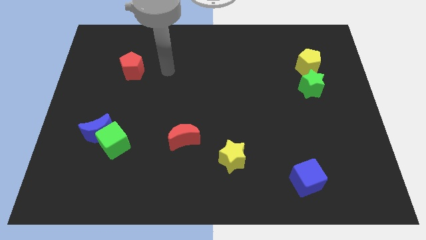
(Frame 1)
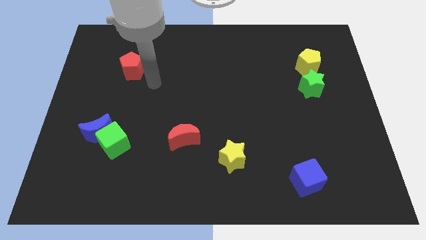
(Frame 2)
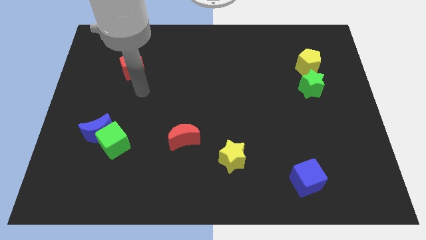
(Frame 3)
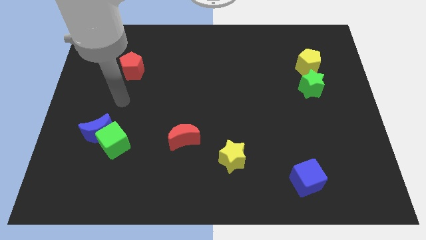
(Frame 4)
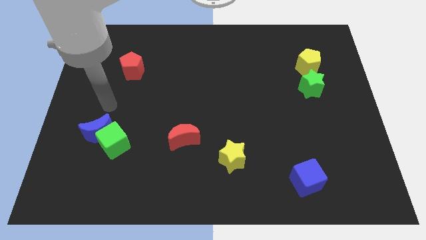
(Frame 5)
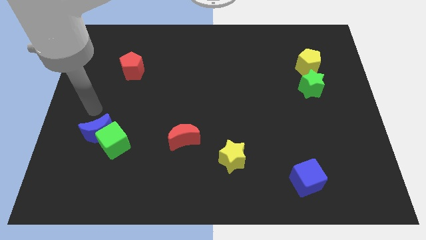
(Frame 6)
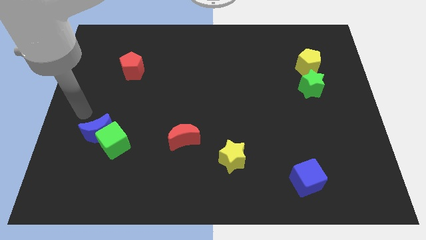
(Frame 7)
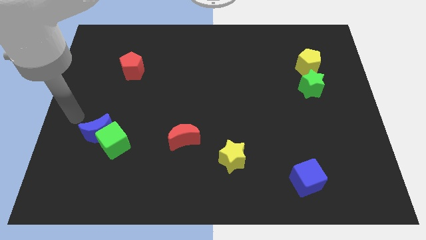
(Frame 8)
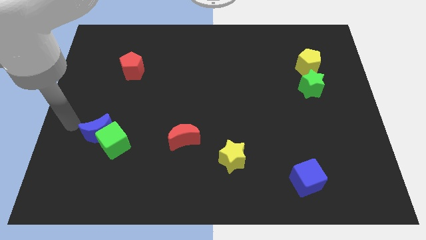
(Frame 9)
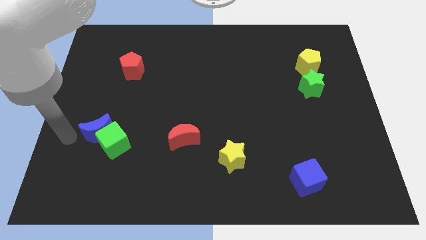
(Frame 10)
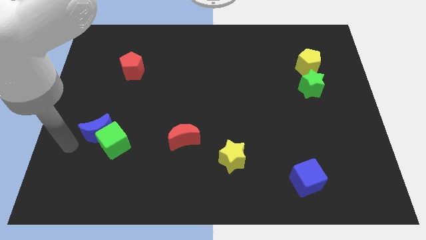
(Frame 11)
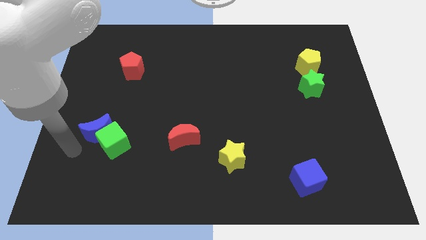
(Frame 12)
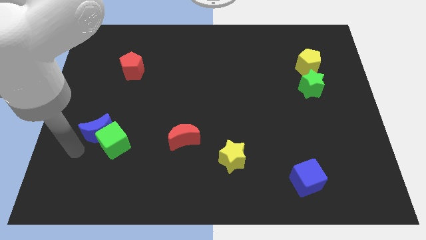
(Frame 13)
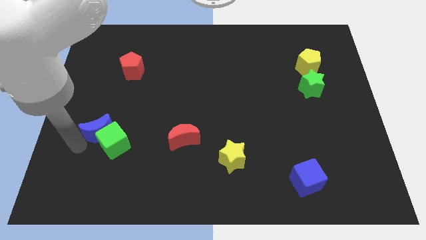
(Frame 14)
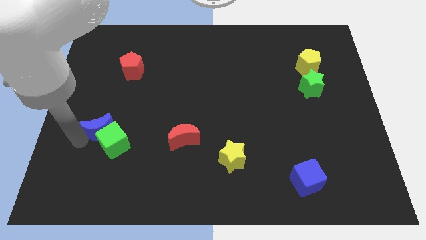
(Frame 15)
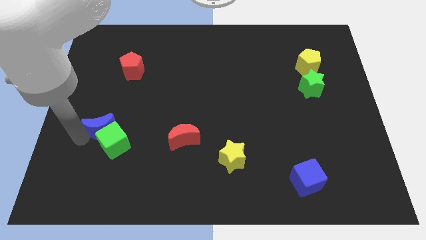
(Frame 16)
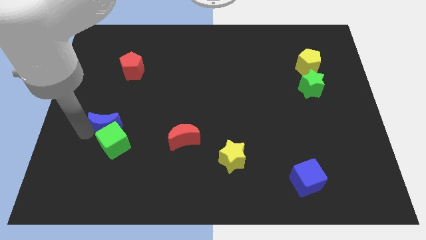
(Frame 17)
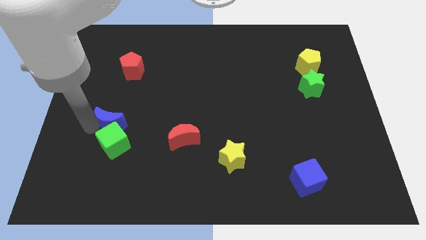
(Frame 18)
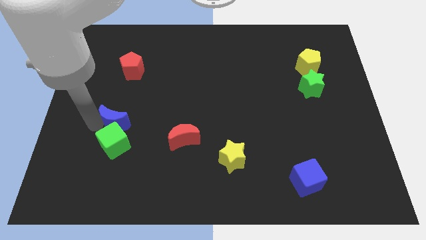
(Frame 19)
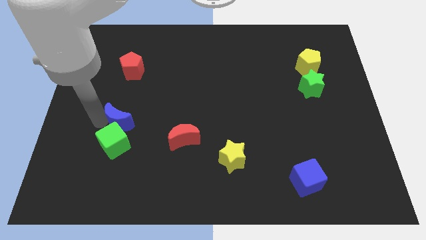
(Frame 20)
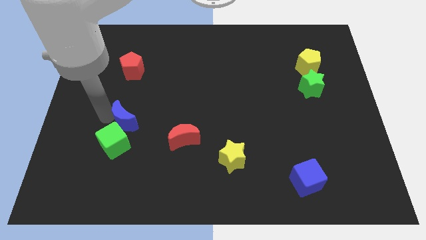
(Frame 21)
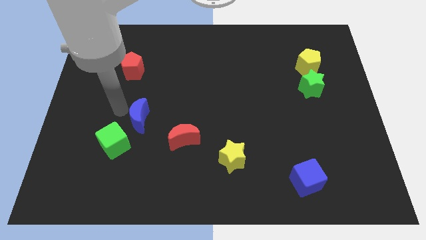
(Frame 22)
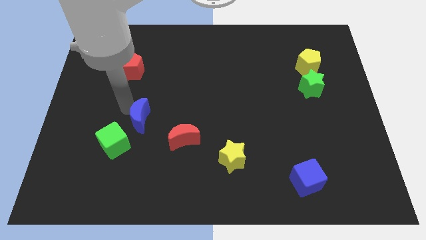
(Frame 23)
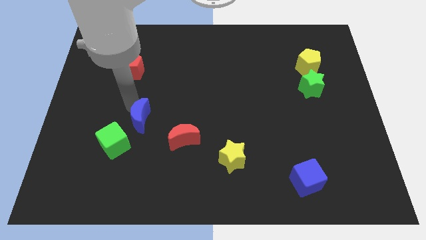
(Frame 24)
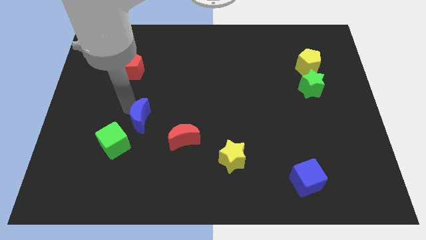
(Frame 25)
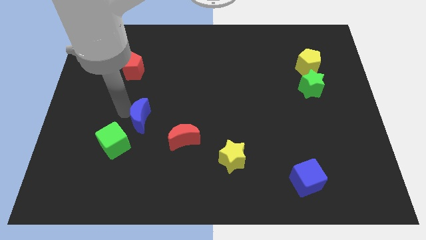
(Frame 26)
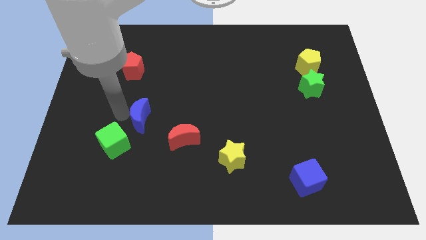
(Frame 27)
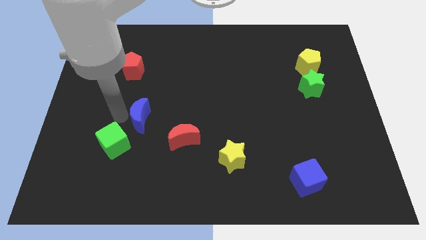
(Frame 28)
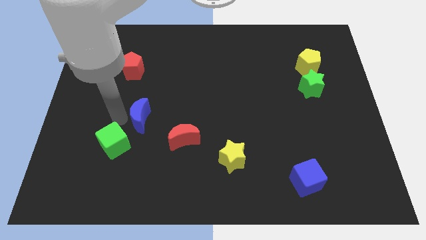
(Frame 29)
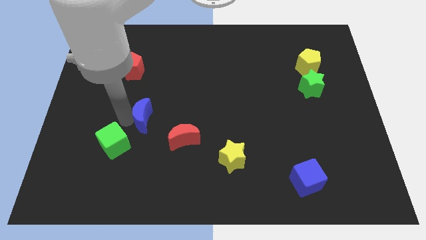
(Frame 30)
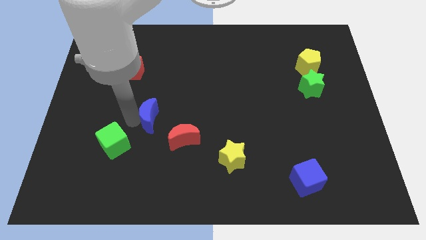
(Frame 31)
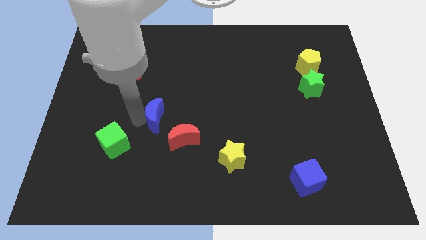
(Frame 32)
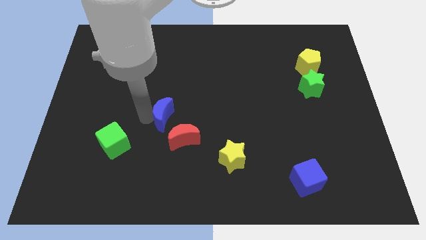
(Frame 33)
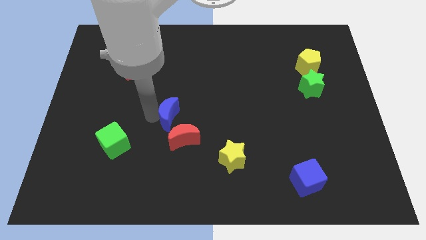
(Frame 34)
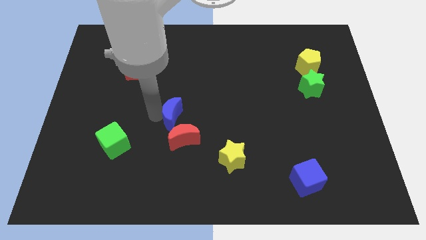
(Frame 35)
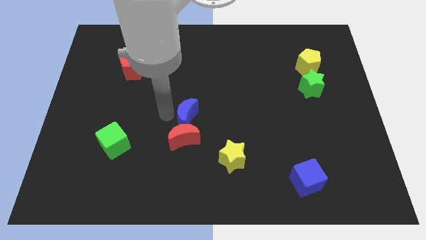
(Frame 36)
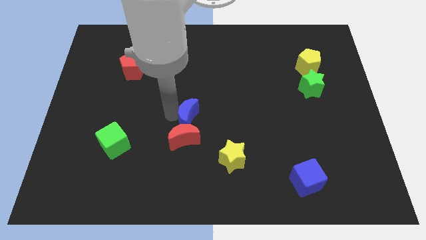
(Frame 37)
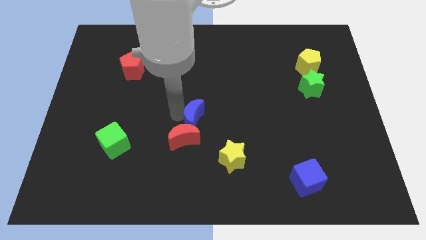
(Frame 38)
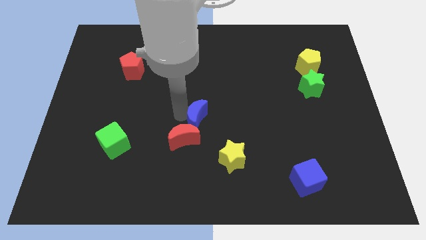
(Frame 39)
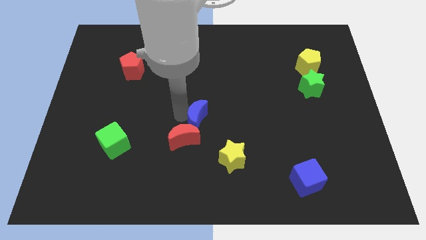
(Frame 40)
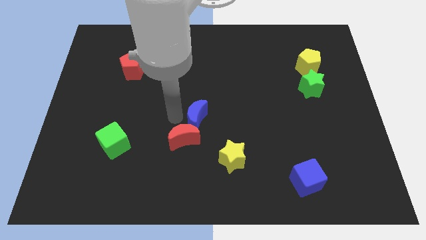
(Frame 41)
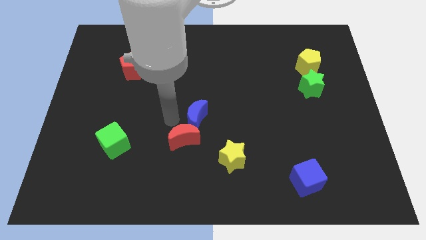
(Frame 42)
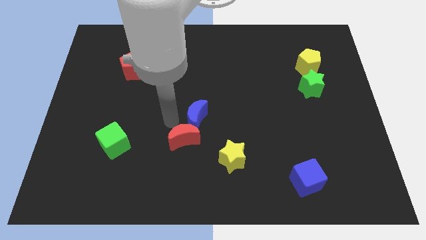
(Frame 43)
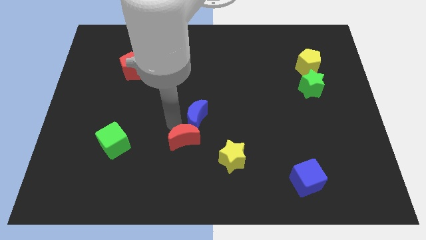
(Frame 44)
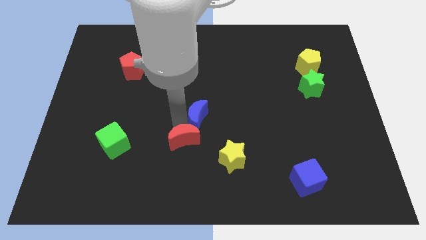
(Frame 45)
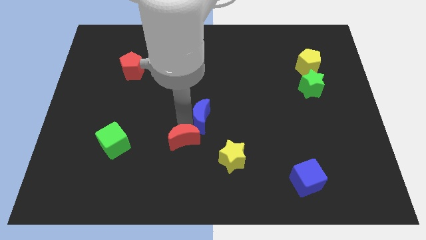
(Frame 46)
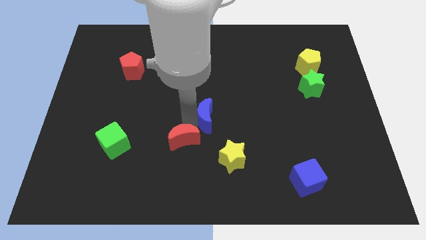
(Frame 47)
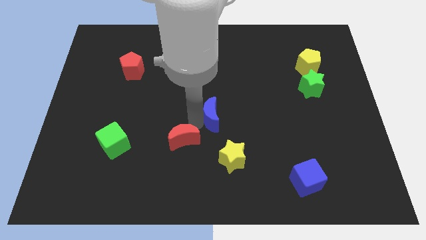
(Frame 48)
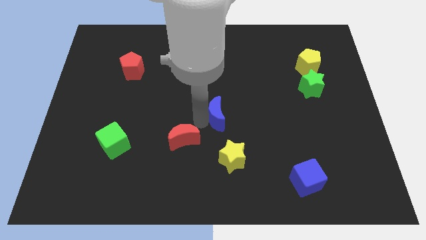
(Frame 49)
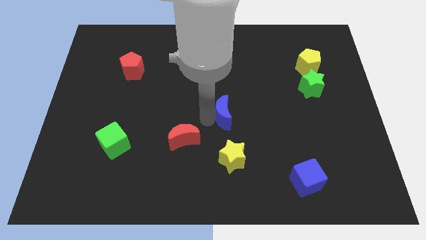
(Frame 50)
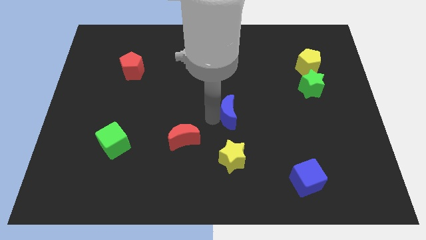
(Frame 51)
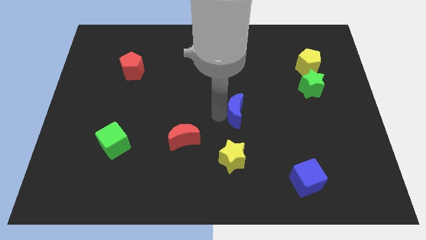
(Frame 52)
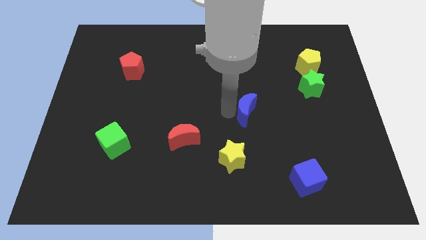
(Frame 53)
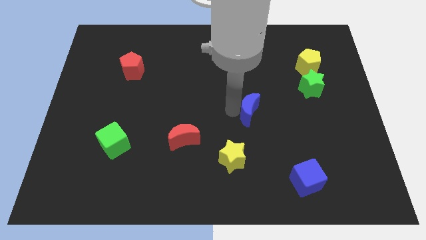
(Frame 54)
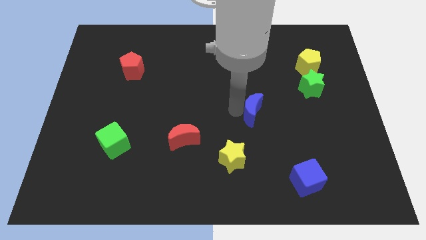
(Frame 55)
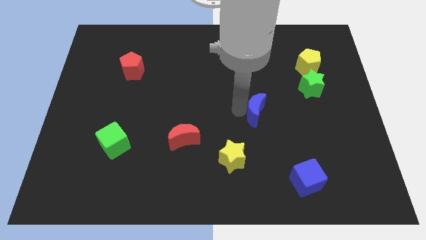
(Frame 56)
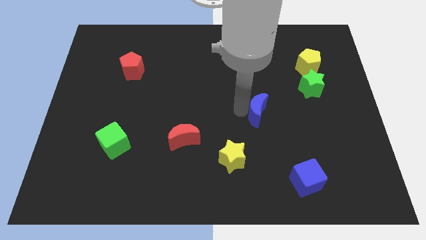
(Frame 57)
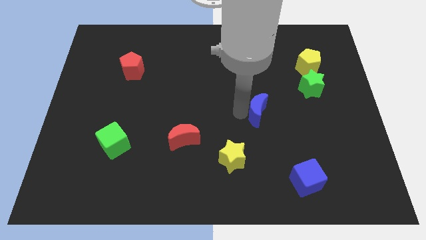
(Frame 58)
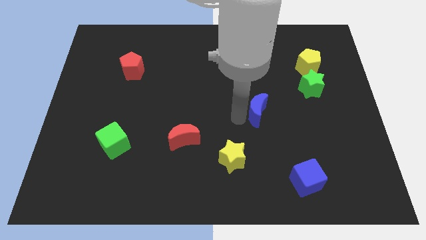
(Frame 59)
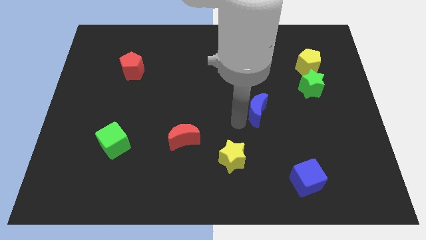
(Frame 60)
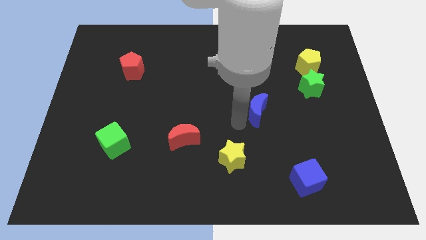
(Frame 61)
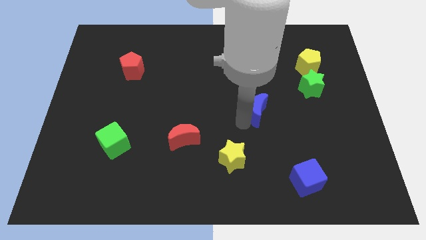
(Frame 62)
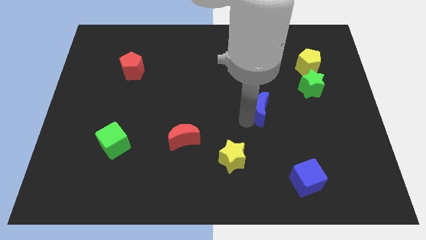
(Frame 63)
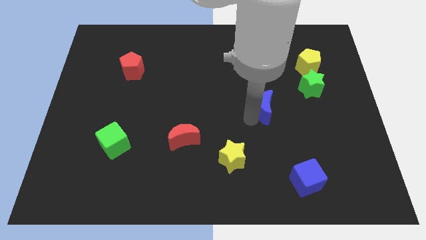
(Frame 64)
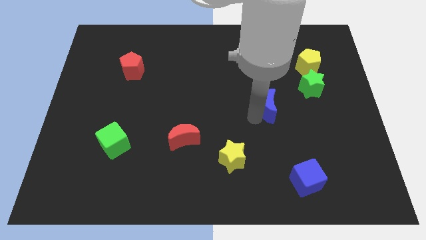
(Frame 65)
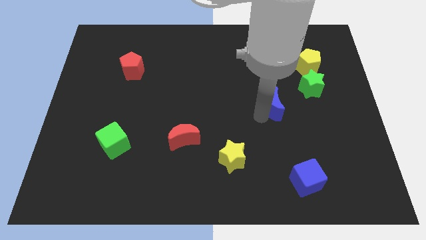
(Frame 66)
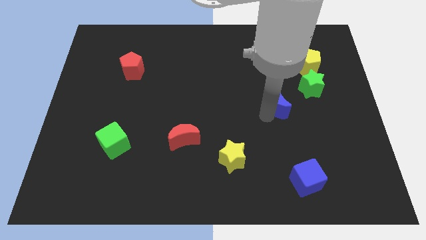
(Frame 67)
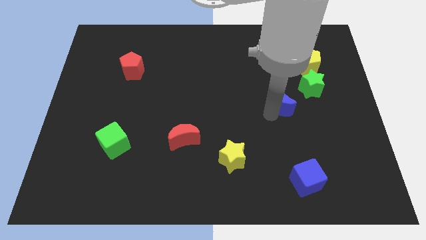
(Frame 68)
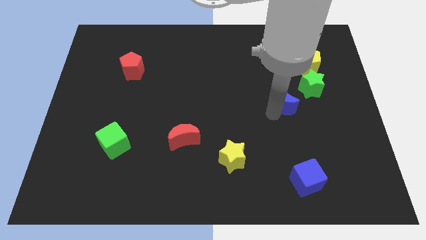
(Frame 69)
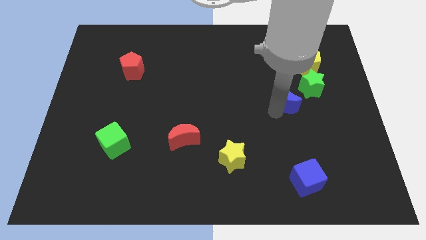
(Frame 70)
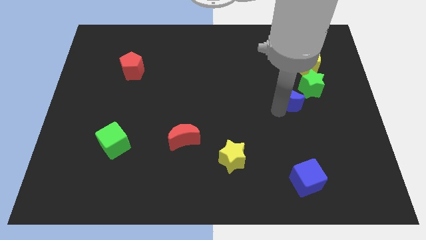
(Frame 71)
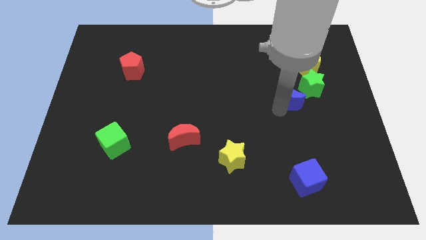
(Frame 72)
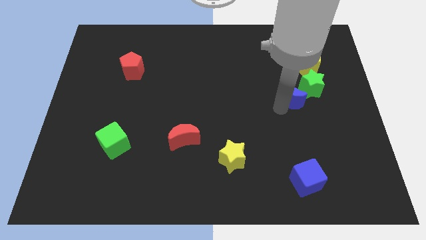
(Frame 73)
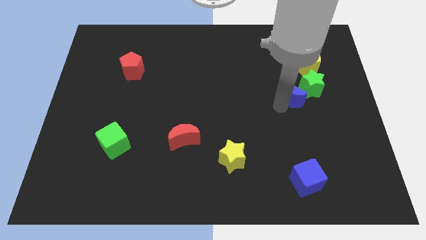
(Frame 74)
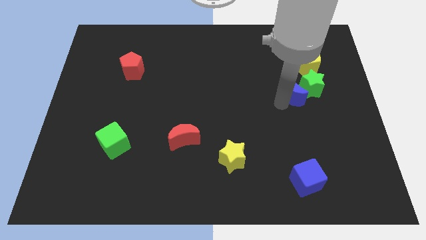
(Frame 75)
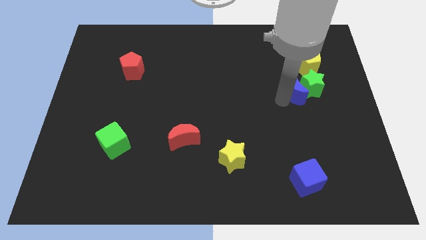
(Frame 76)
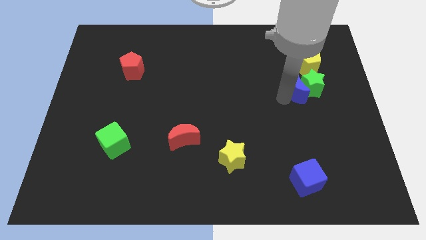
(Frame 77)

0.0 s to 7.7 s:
push the blue moon to the green star

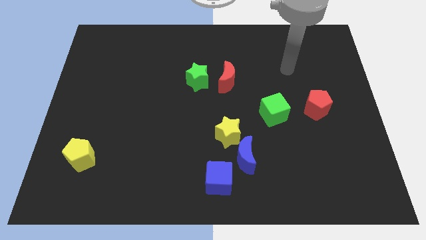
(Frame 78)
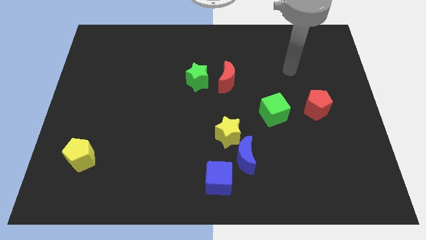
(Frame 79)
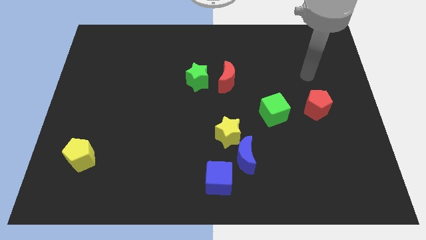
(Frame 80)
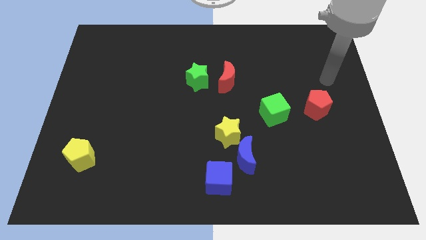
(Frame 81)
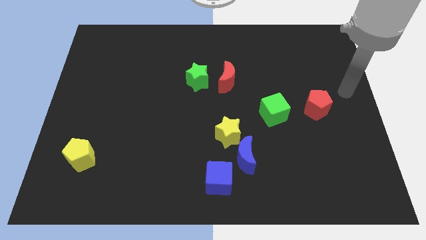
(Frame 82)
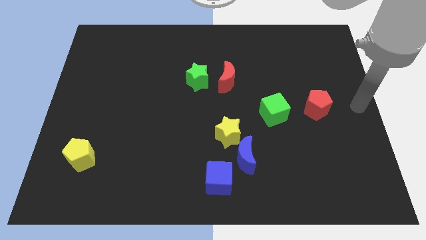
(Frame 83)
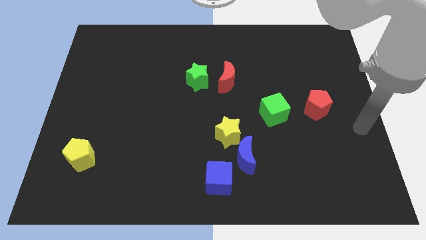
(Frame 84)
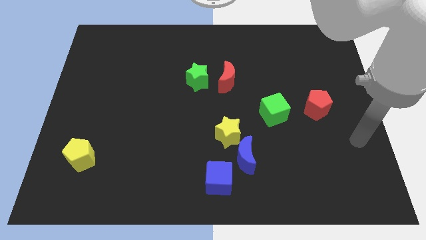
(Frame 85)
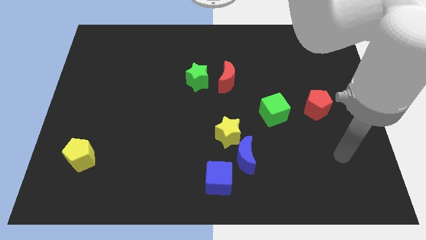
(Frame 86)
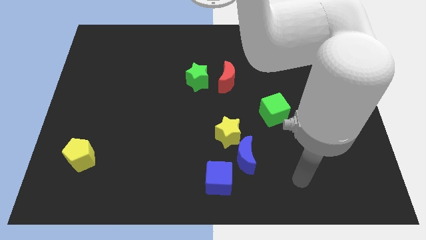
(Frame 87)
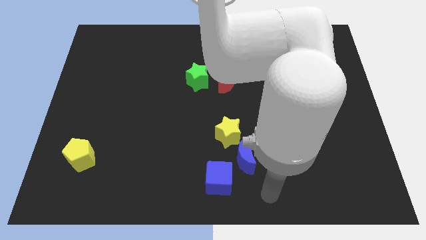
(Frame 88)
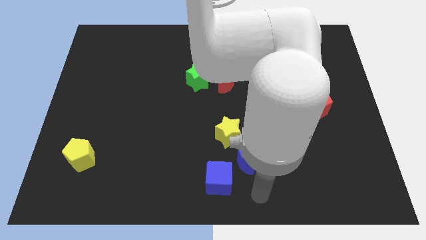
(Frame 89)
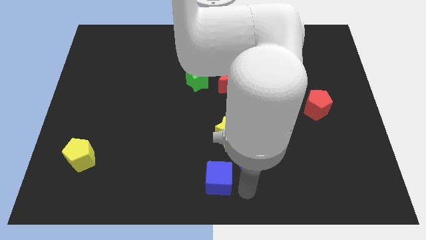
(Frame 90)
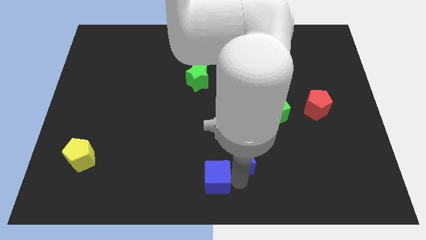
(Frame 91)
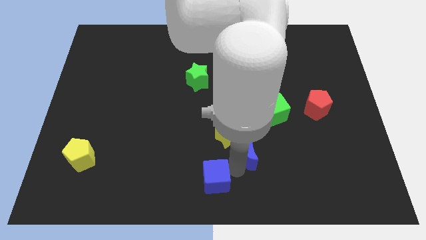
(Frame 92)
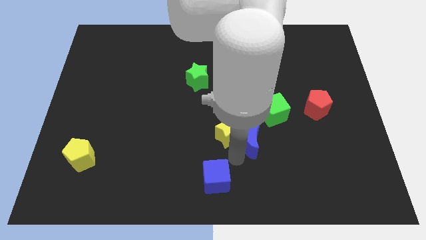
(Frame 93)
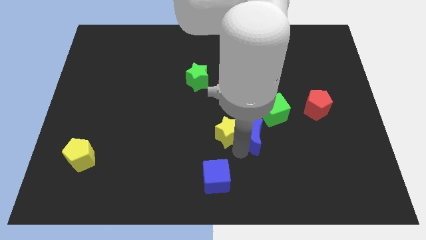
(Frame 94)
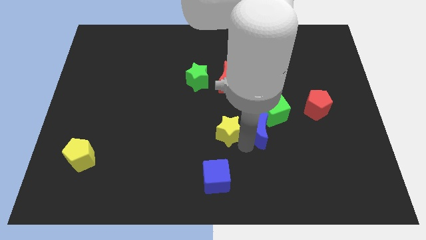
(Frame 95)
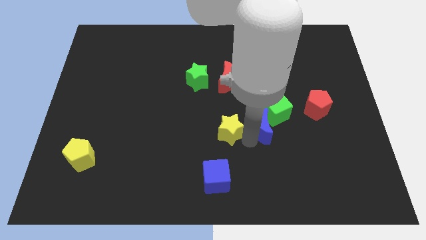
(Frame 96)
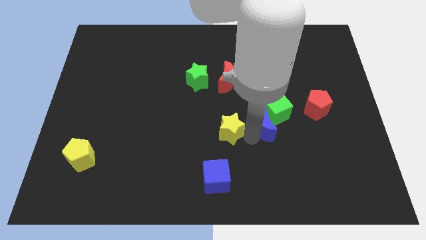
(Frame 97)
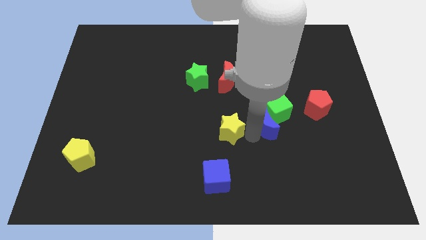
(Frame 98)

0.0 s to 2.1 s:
push the blue moon close to the green cube
